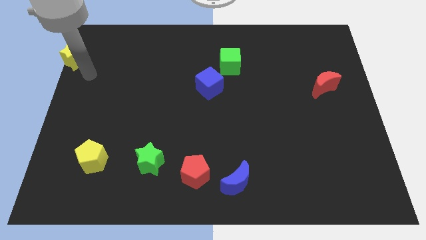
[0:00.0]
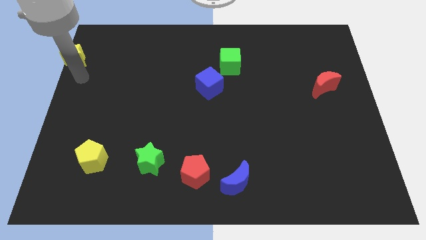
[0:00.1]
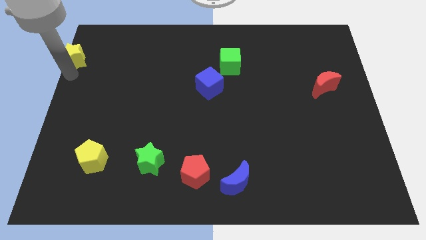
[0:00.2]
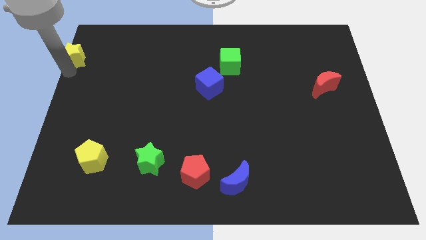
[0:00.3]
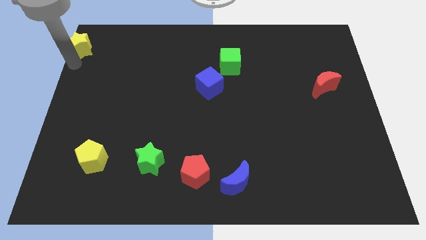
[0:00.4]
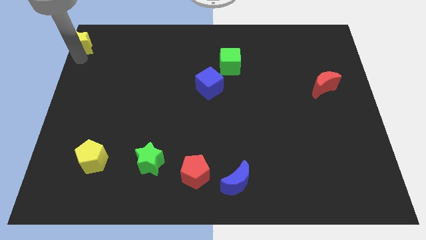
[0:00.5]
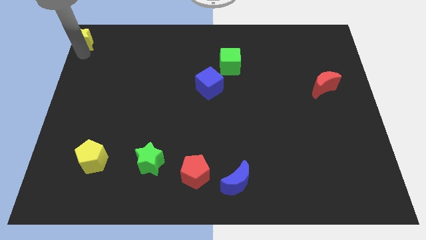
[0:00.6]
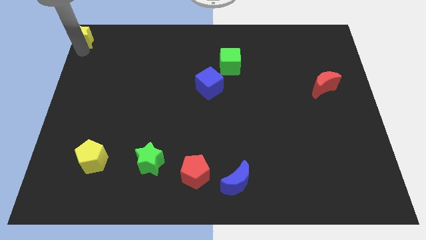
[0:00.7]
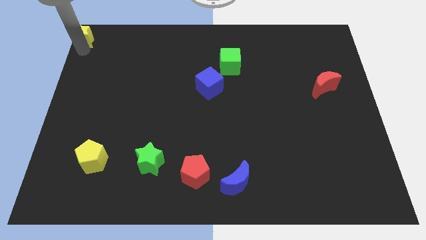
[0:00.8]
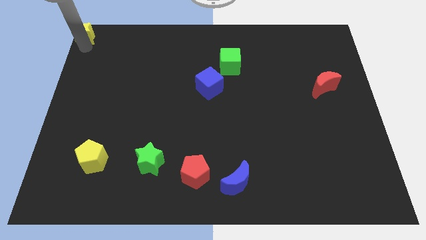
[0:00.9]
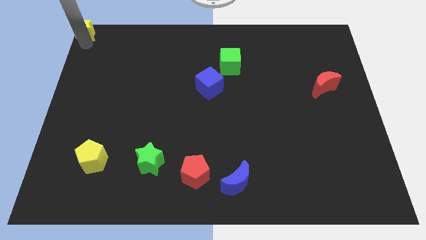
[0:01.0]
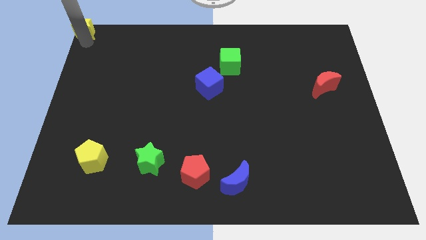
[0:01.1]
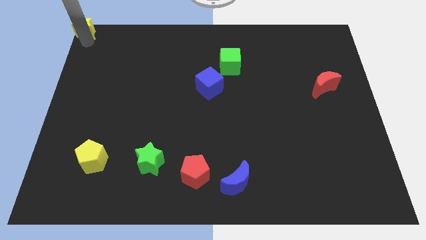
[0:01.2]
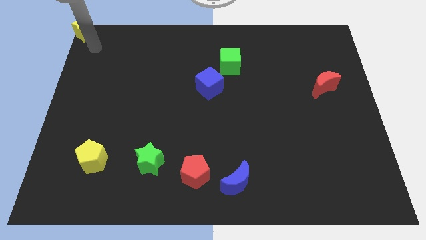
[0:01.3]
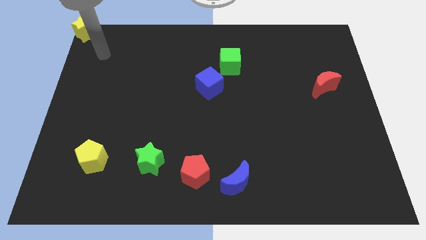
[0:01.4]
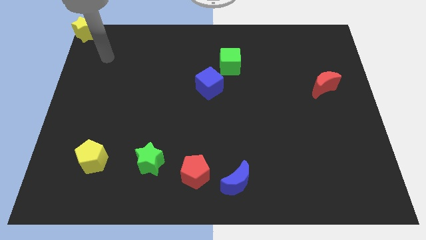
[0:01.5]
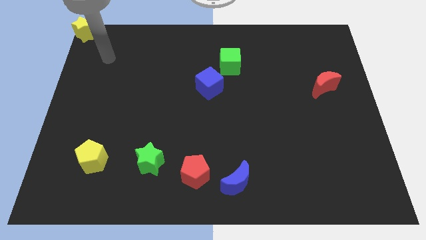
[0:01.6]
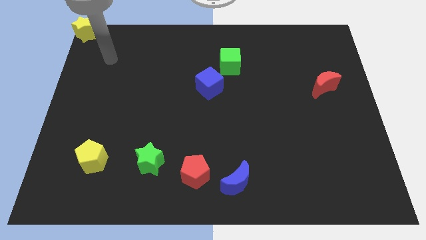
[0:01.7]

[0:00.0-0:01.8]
place the yellow star at the top left side of the board

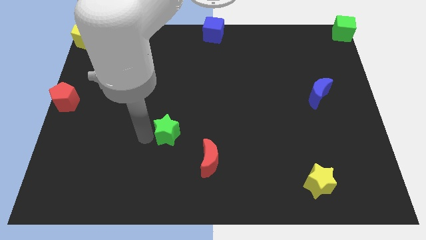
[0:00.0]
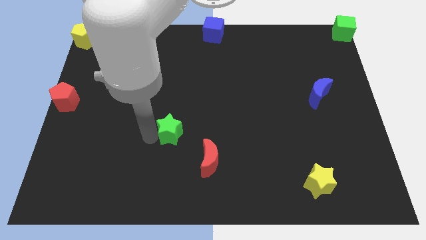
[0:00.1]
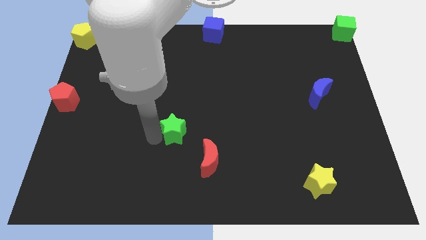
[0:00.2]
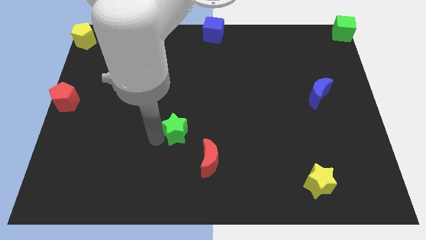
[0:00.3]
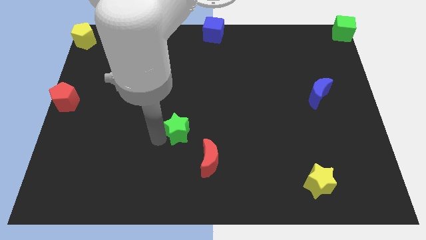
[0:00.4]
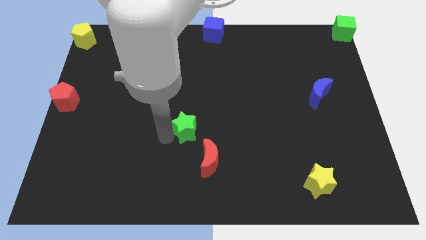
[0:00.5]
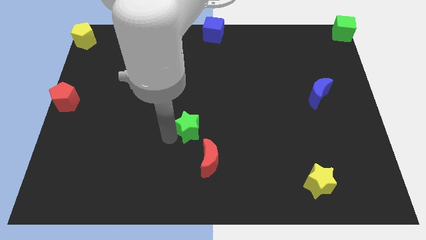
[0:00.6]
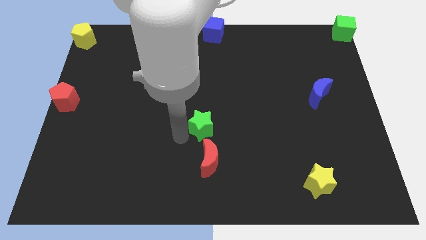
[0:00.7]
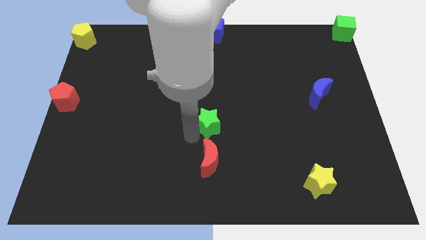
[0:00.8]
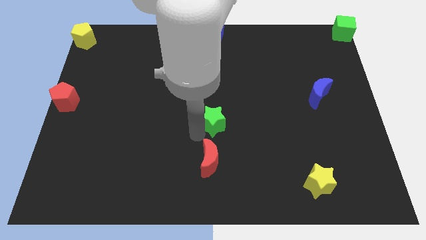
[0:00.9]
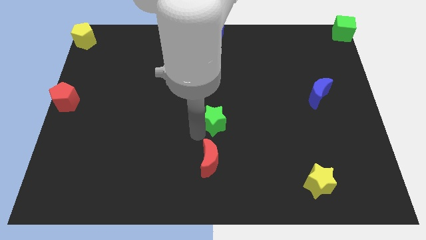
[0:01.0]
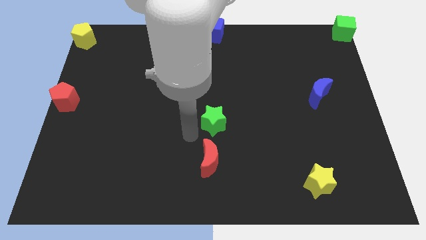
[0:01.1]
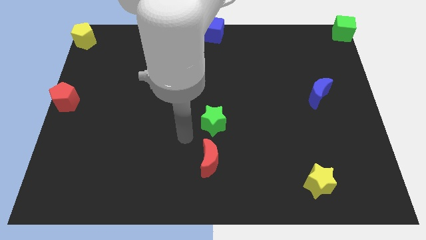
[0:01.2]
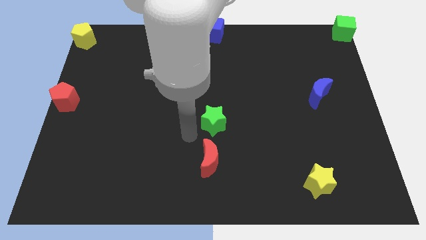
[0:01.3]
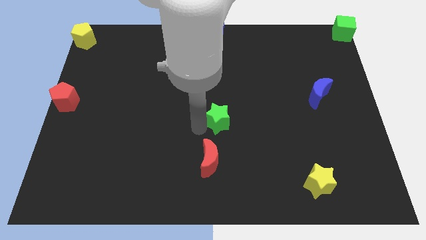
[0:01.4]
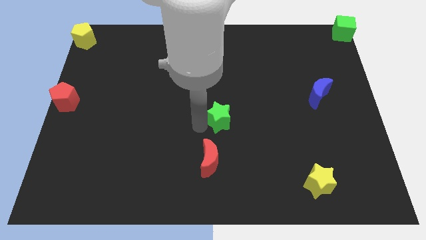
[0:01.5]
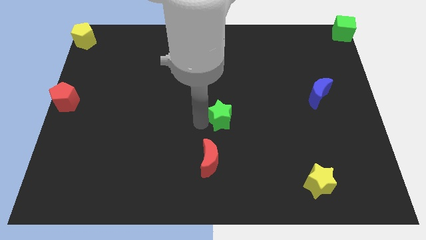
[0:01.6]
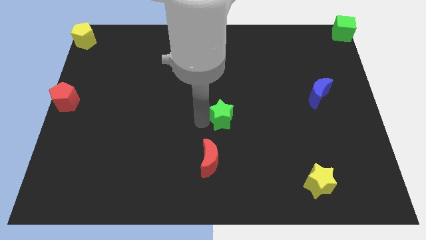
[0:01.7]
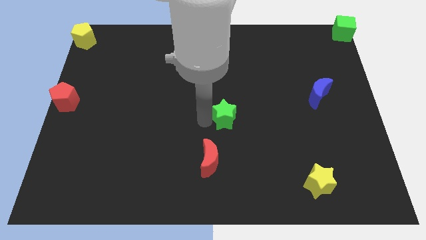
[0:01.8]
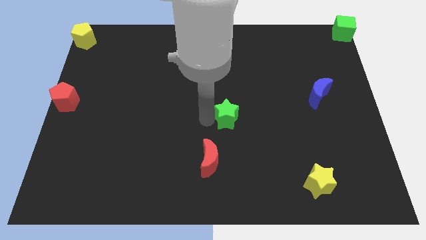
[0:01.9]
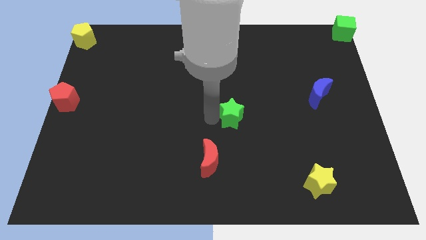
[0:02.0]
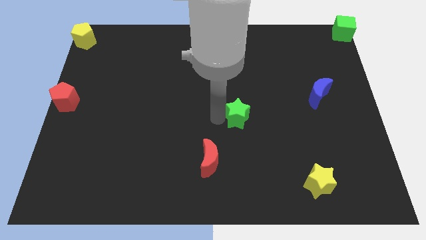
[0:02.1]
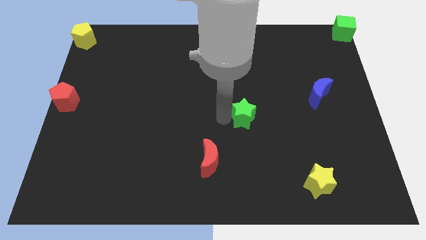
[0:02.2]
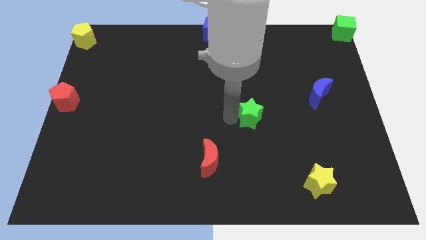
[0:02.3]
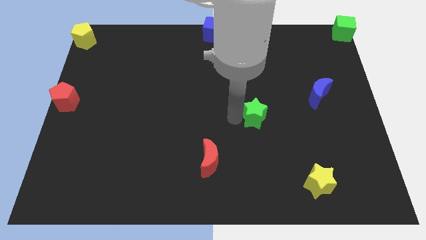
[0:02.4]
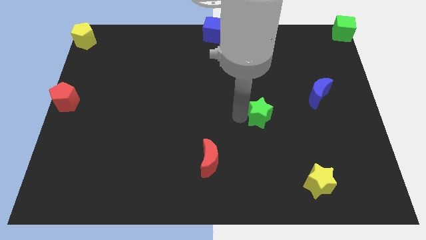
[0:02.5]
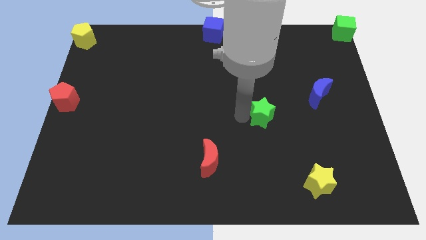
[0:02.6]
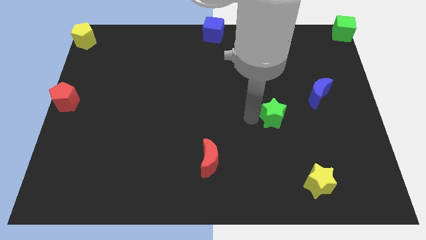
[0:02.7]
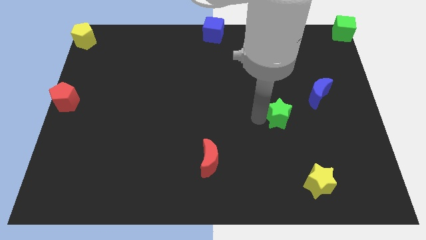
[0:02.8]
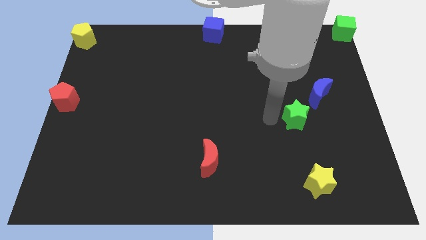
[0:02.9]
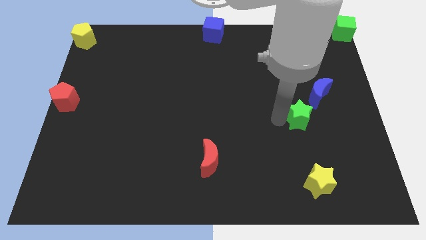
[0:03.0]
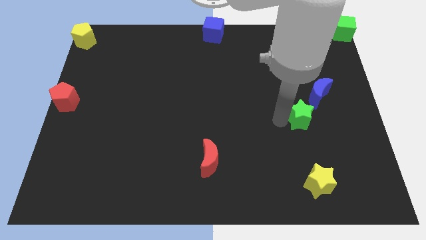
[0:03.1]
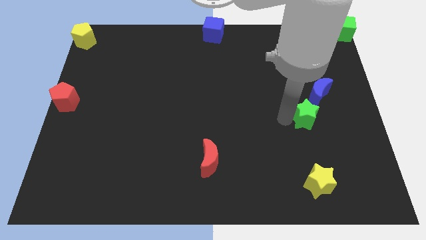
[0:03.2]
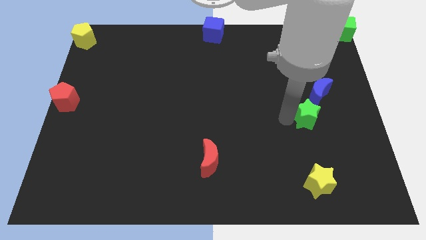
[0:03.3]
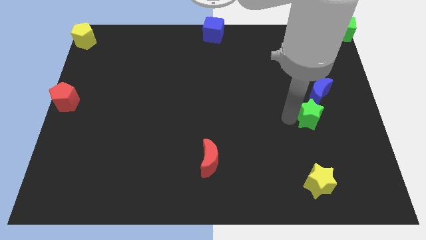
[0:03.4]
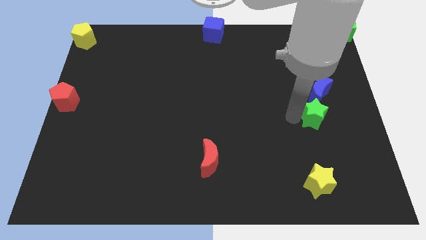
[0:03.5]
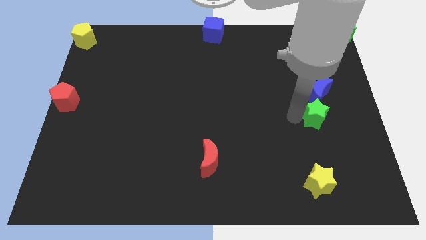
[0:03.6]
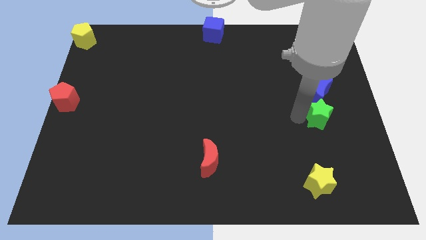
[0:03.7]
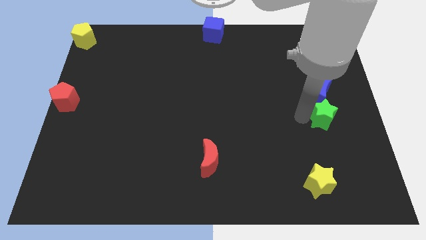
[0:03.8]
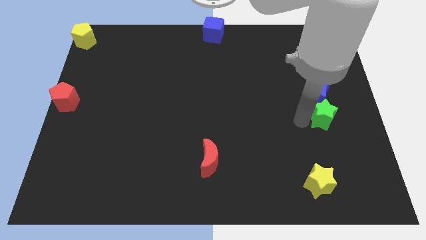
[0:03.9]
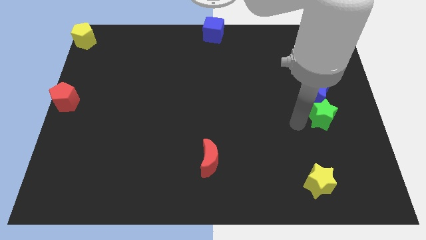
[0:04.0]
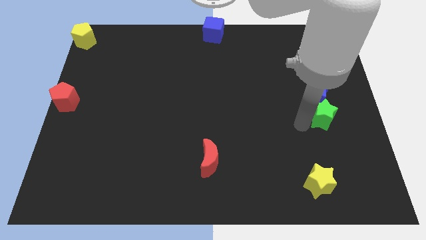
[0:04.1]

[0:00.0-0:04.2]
put the green star at the bottom of the blue crescent

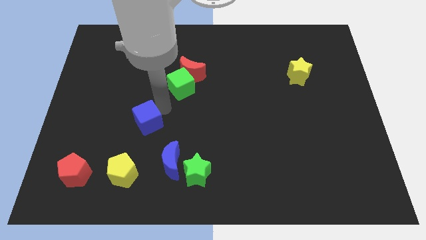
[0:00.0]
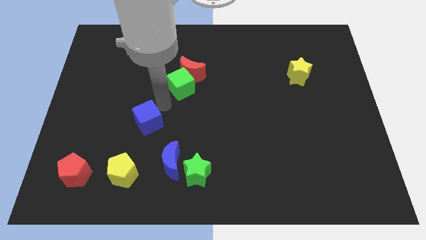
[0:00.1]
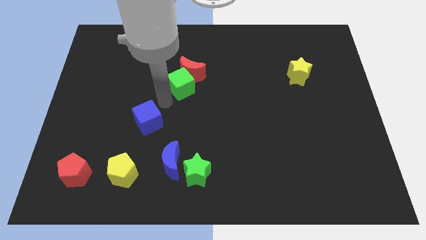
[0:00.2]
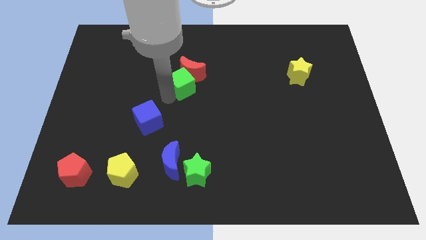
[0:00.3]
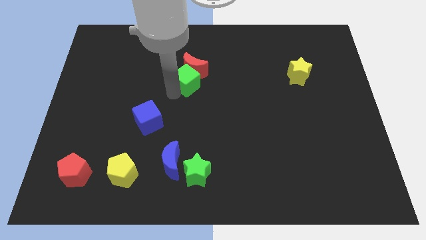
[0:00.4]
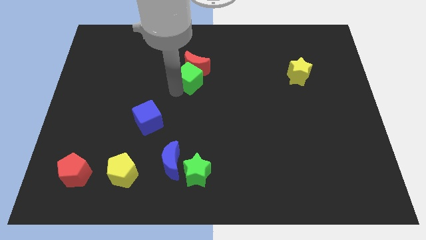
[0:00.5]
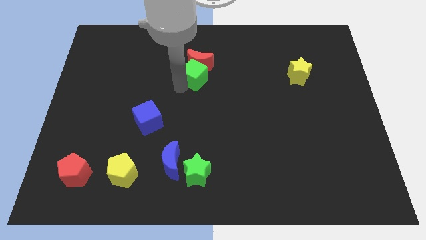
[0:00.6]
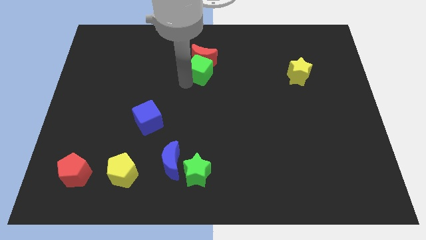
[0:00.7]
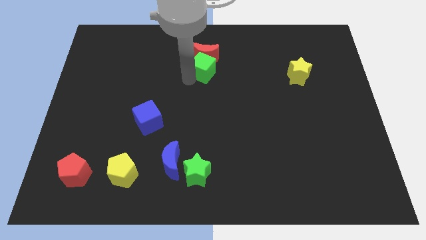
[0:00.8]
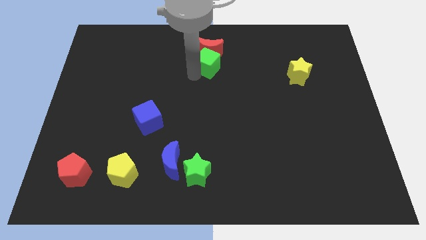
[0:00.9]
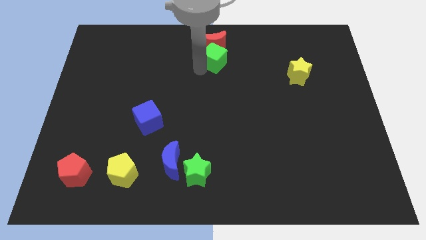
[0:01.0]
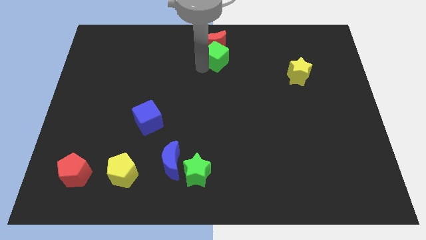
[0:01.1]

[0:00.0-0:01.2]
push the group of blocks to the top center of the board

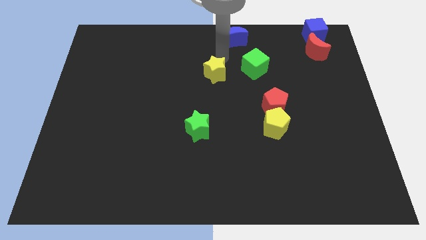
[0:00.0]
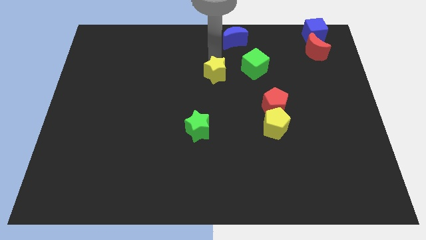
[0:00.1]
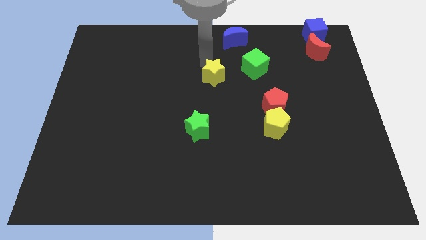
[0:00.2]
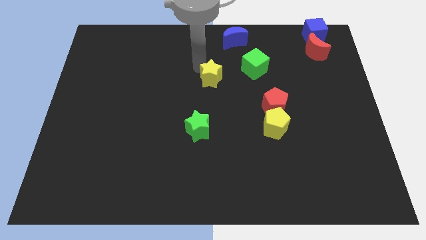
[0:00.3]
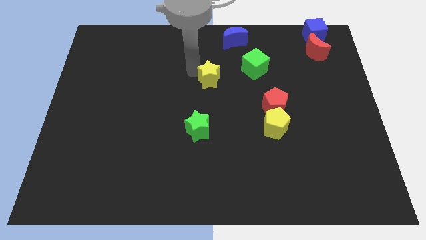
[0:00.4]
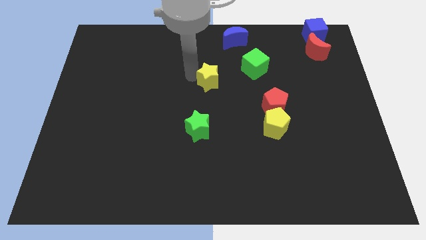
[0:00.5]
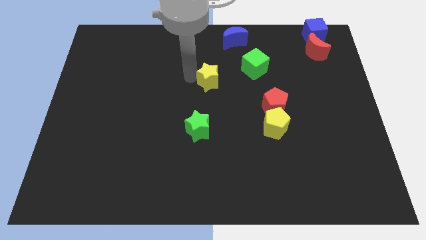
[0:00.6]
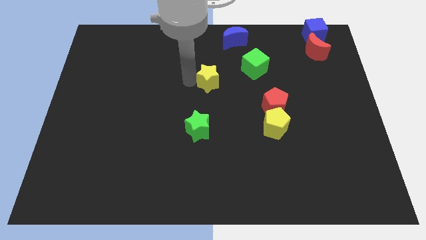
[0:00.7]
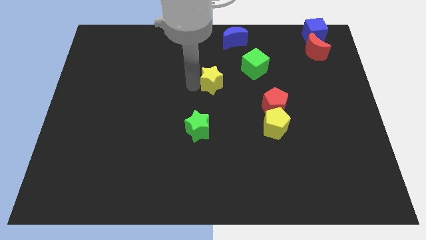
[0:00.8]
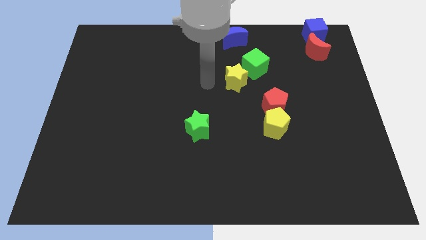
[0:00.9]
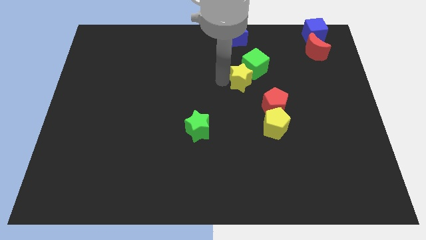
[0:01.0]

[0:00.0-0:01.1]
push yellow star to the bottom left to the green cube

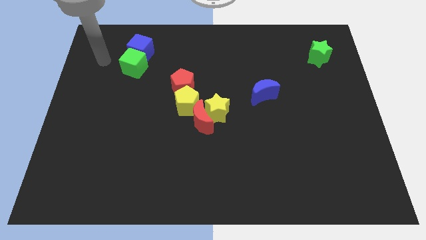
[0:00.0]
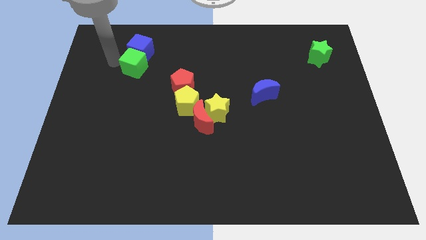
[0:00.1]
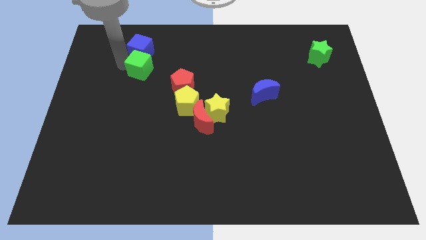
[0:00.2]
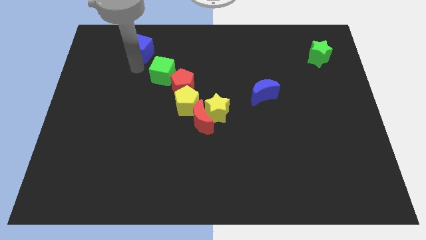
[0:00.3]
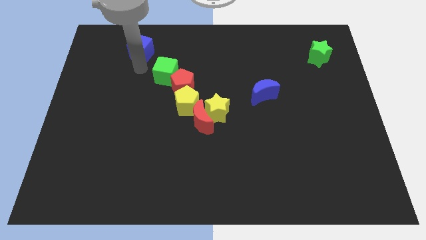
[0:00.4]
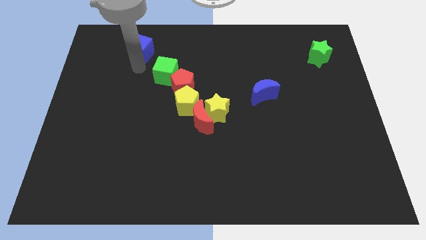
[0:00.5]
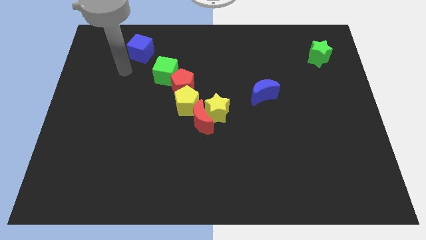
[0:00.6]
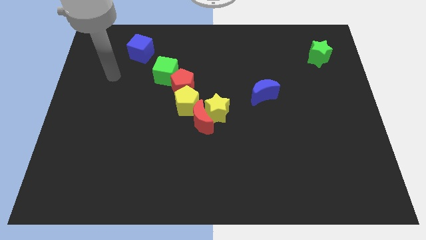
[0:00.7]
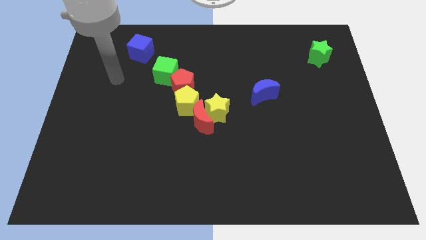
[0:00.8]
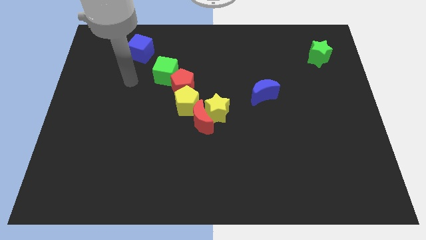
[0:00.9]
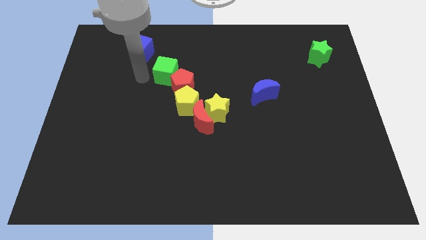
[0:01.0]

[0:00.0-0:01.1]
move the green cube to the top left of the red pentagon
